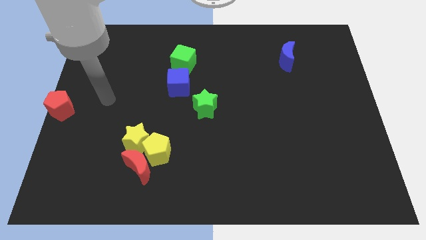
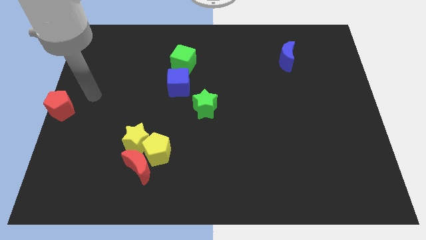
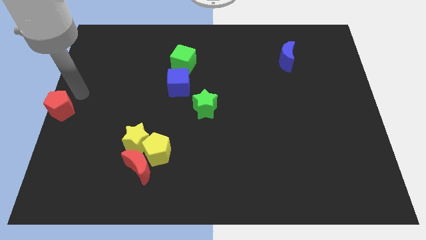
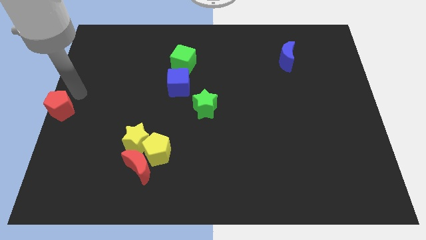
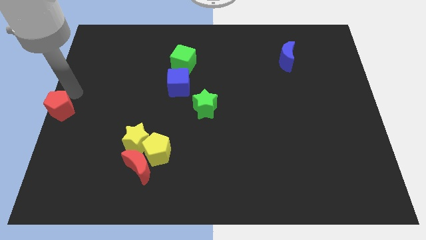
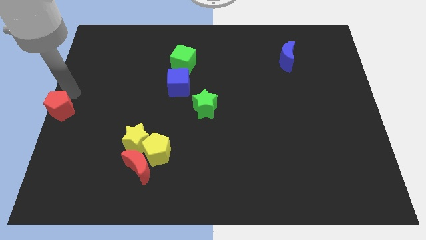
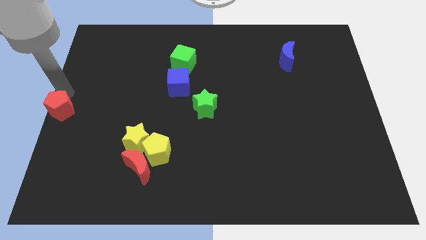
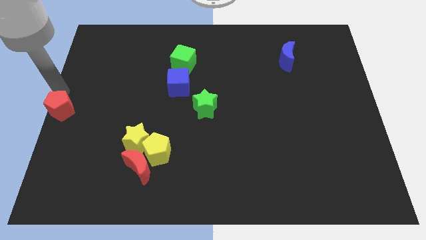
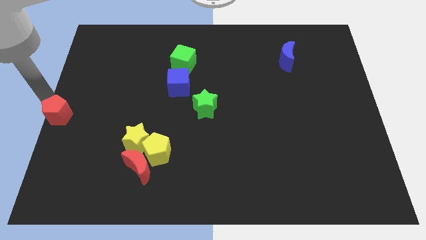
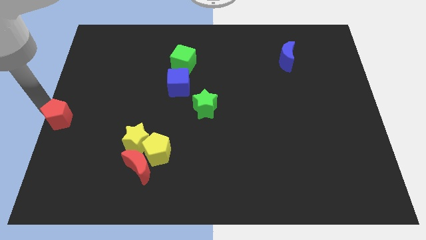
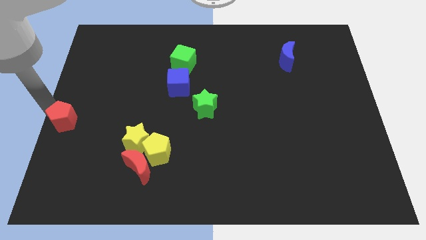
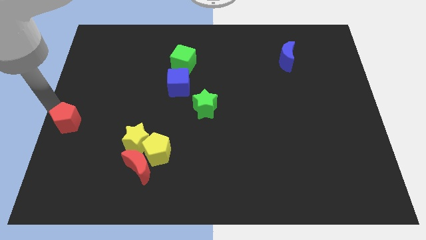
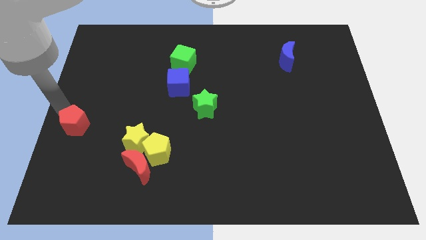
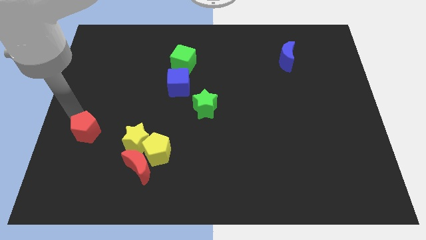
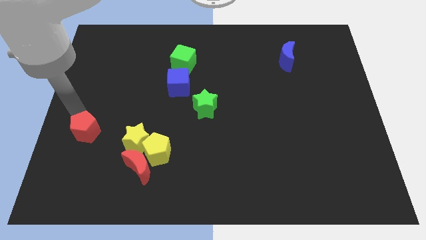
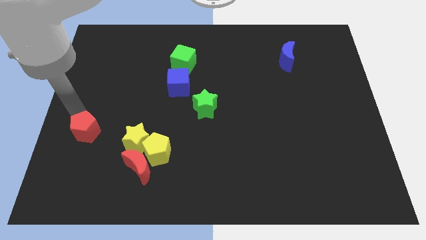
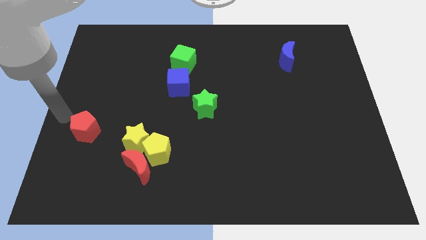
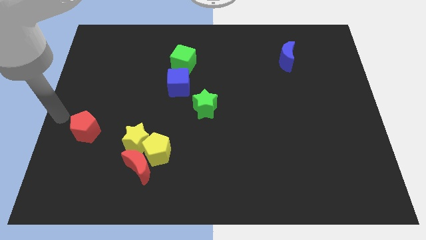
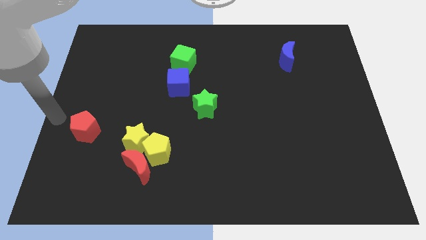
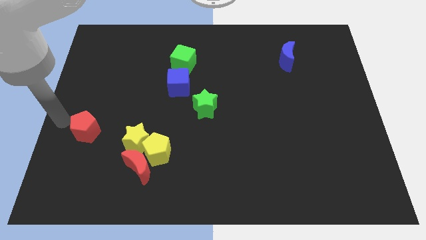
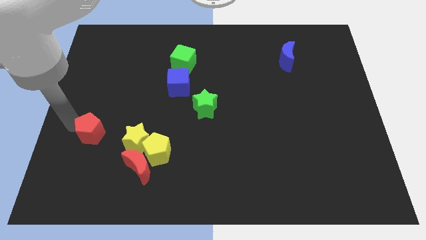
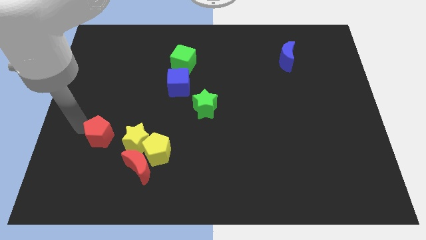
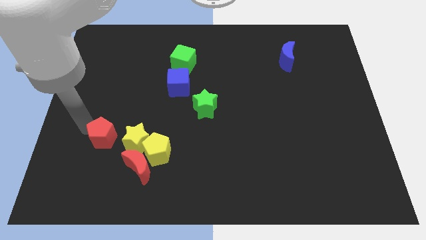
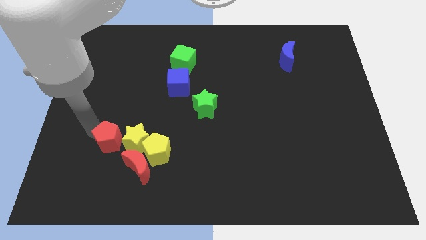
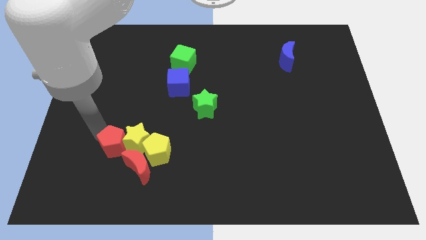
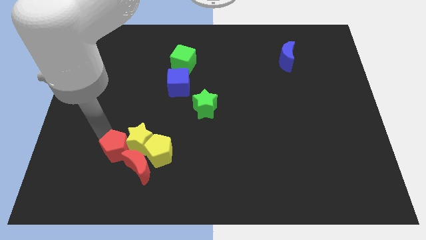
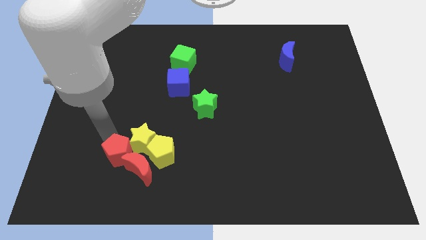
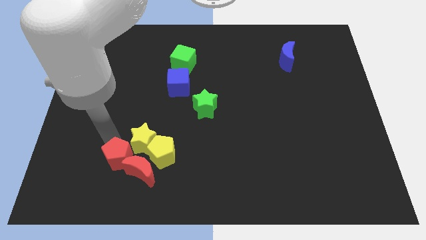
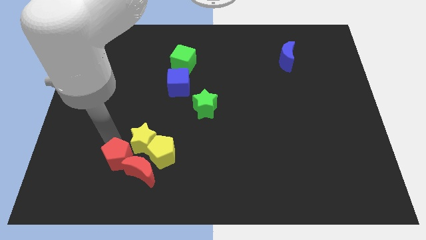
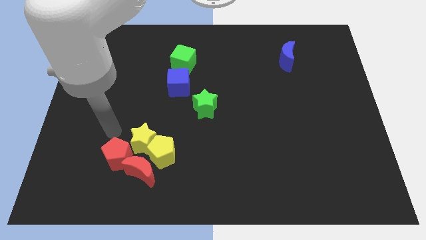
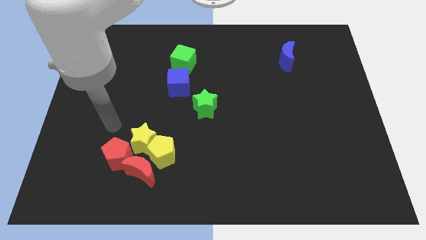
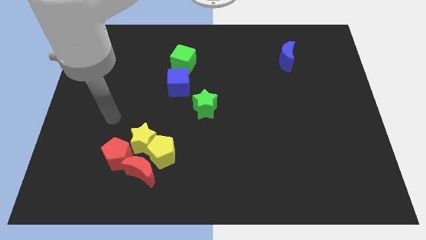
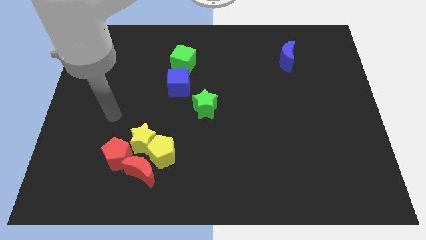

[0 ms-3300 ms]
move the red pentagon into the group of blocks

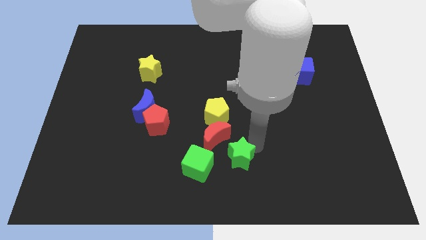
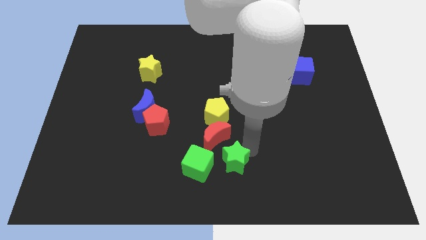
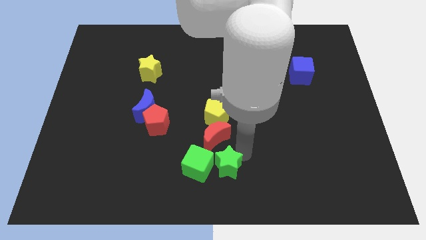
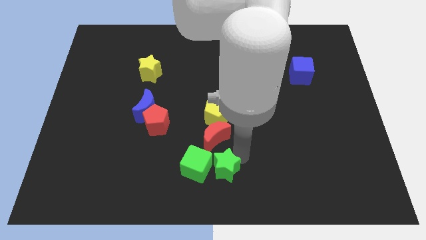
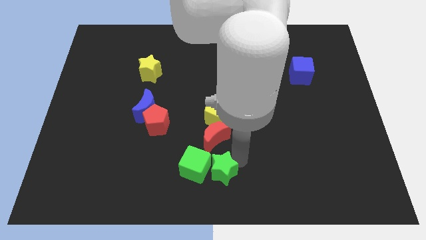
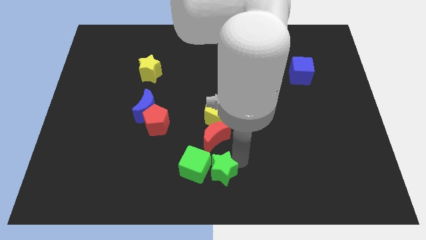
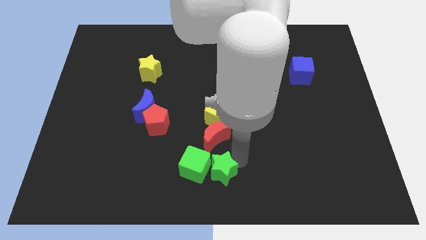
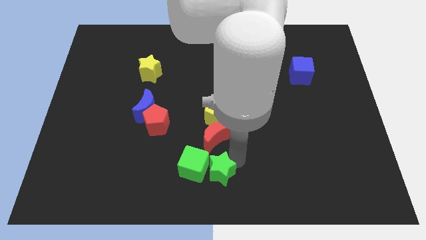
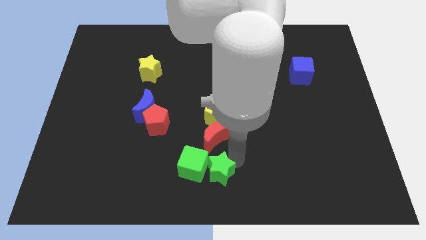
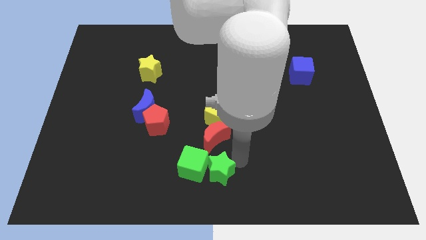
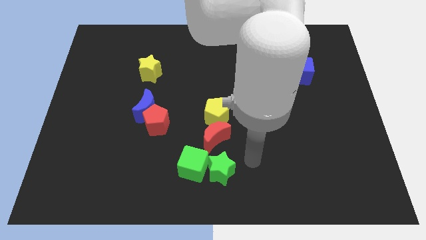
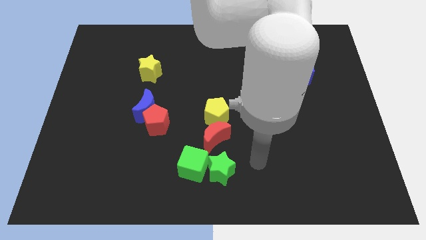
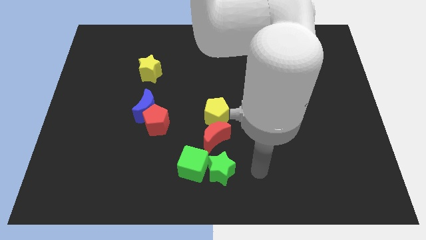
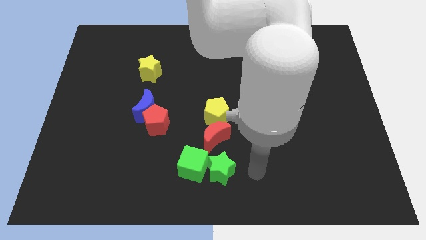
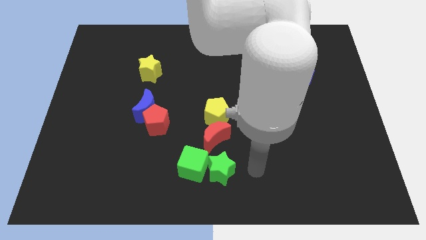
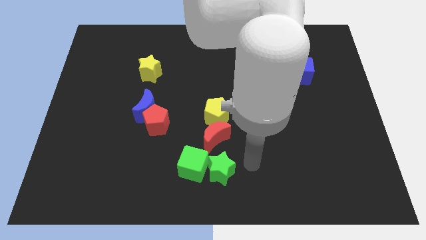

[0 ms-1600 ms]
push the green star into the green cube

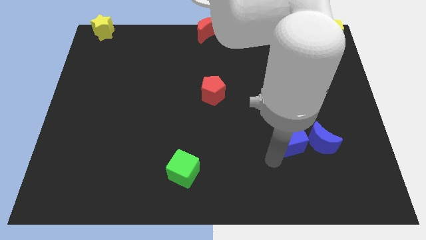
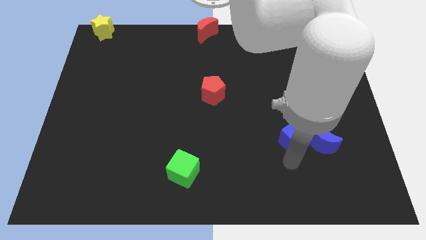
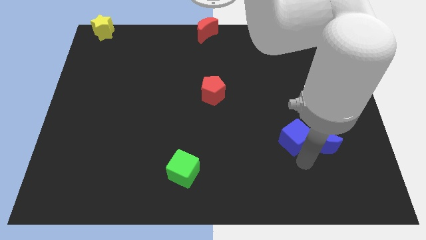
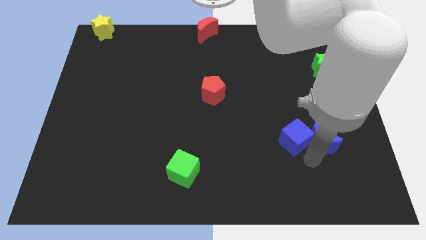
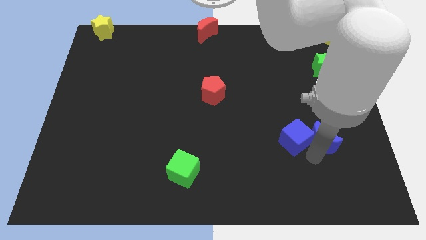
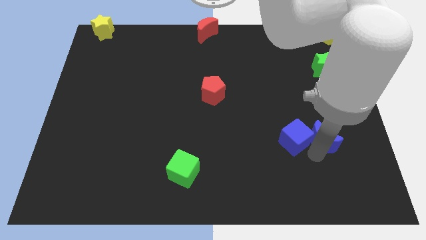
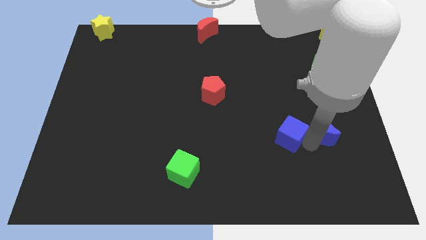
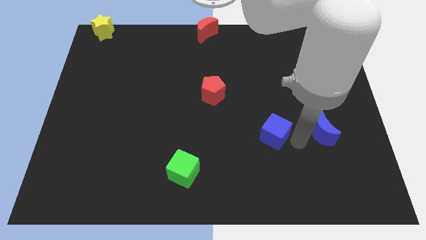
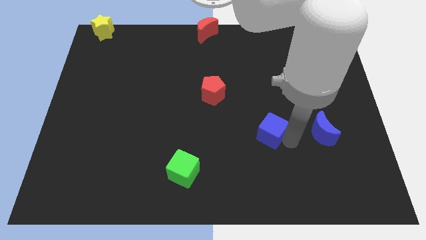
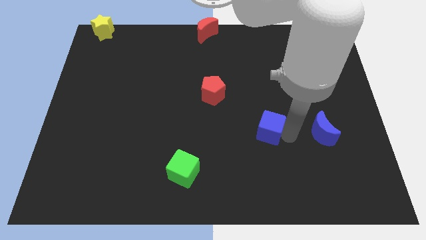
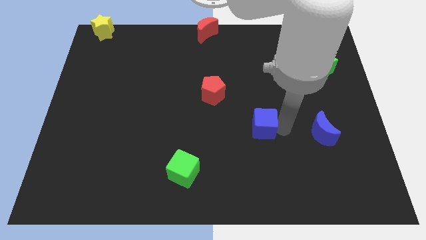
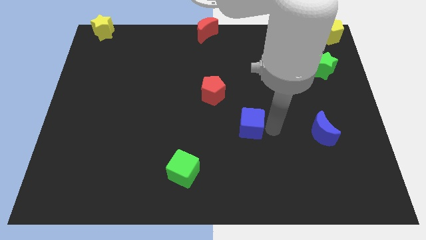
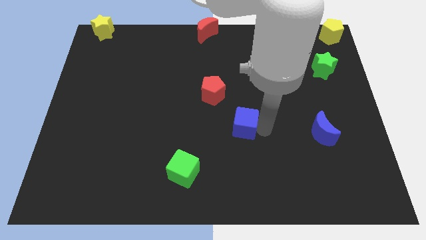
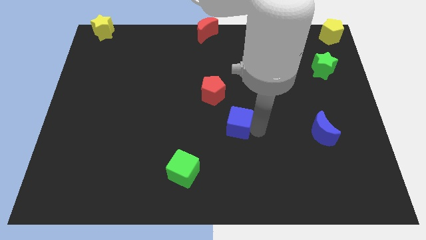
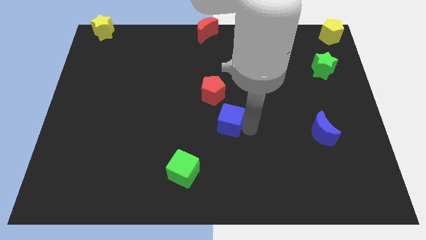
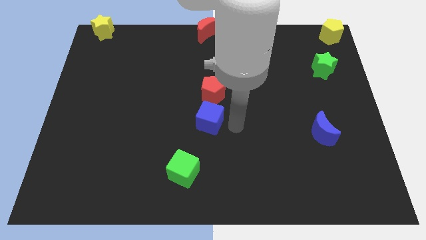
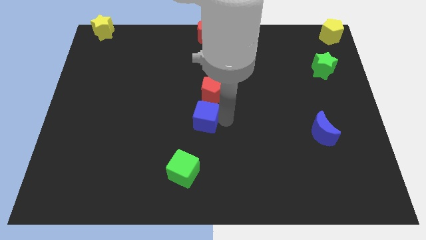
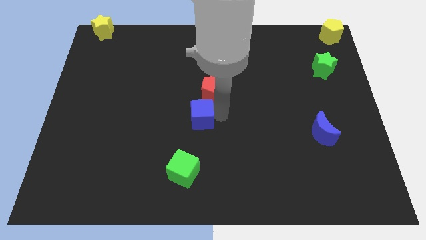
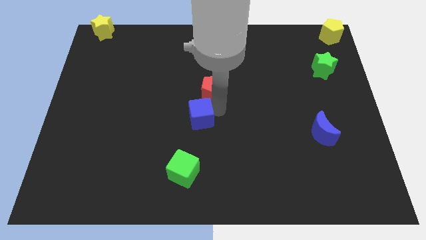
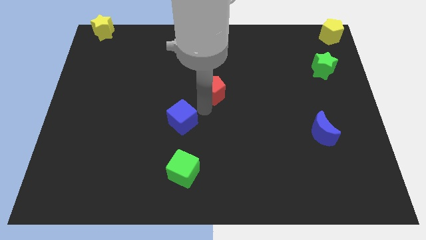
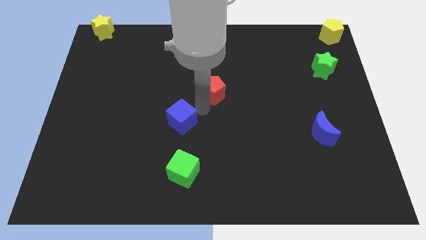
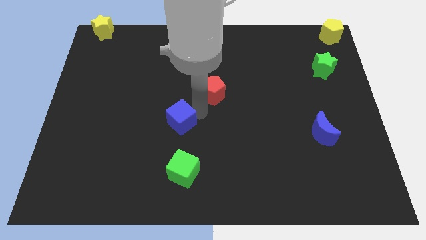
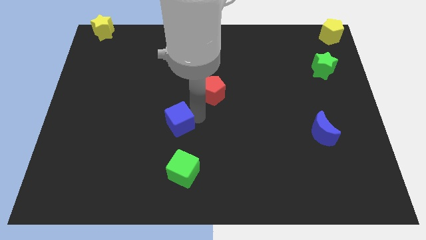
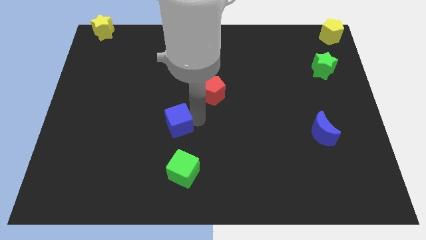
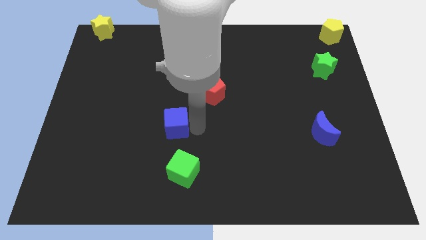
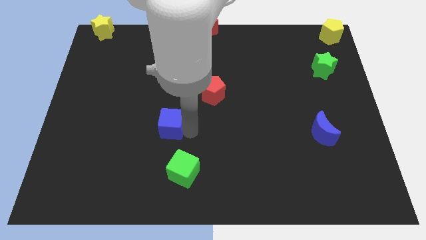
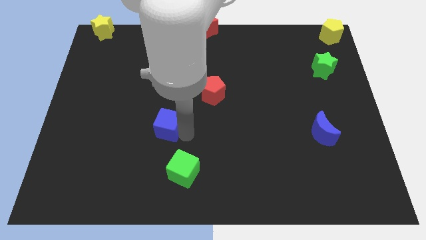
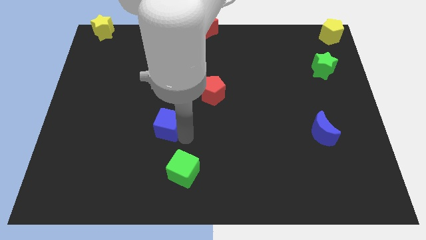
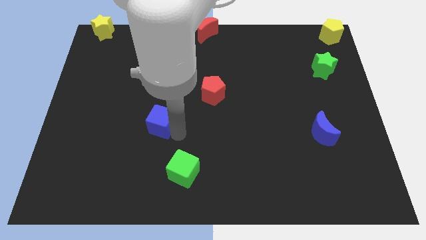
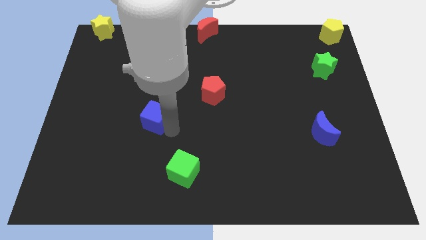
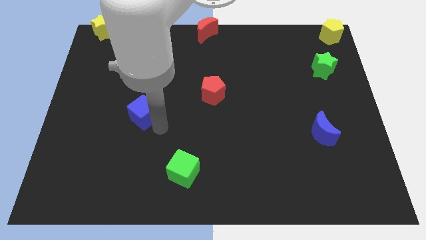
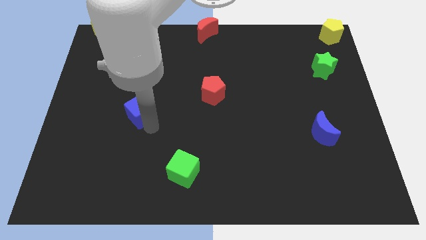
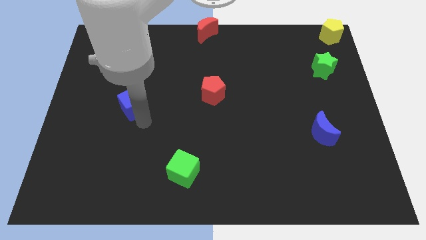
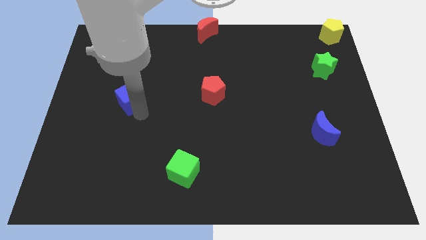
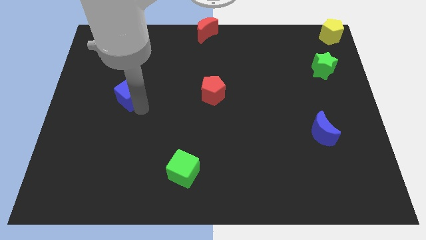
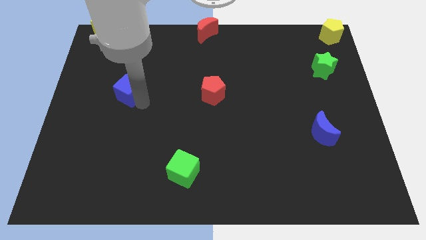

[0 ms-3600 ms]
slide the blue cube to the left side of the red pentagon

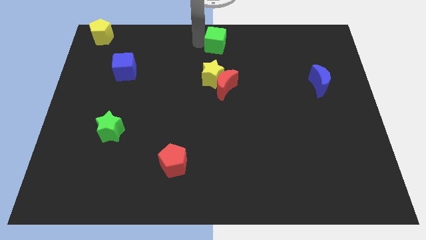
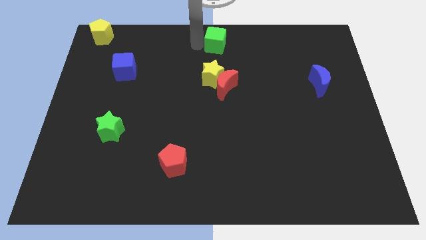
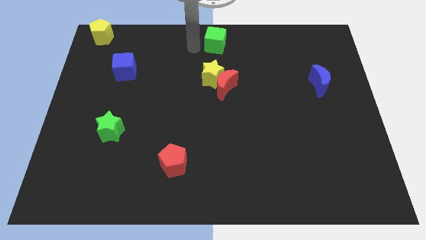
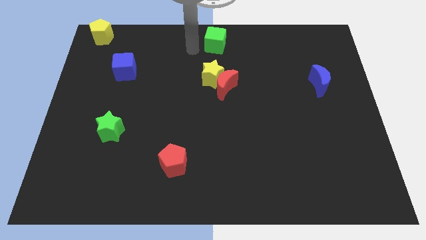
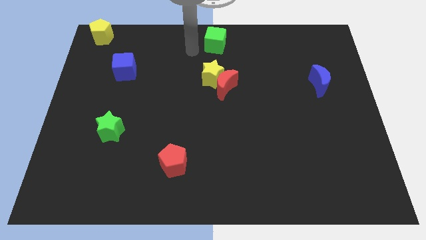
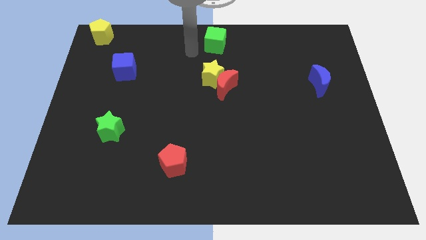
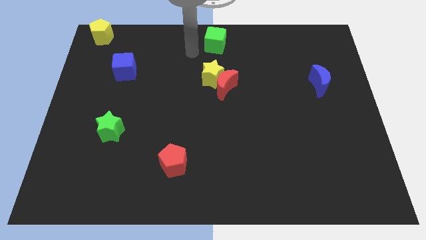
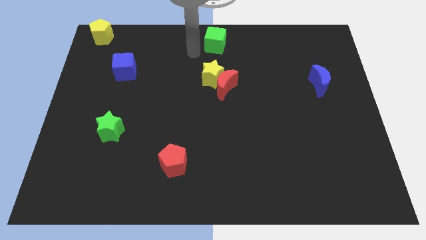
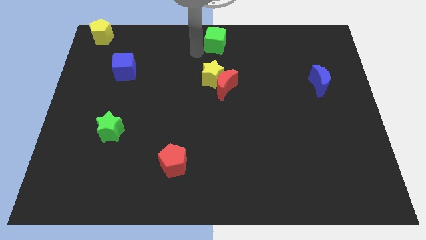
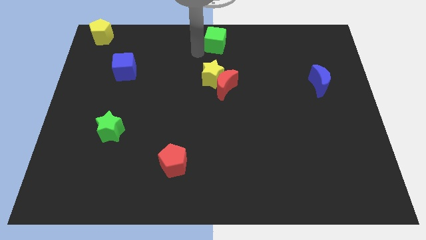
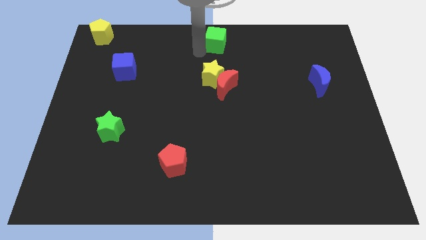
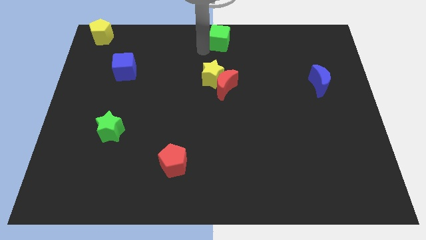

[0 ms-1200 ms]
push the green cube to the top center of the board
